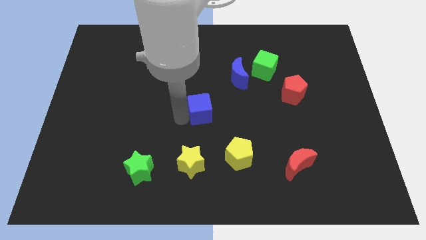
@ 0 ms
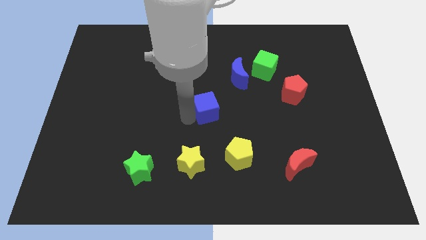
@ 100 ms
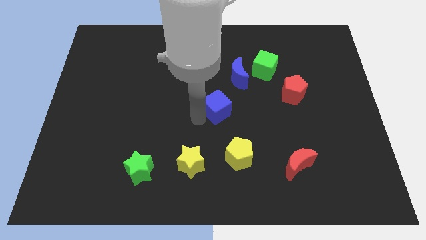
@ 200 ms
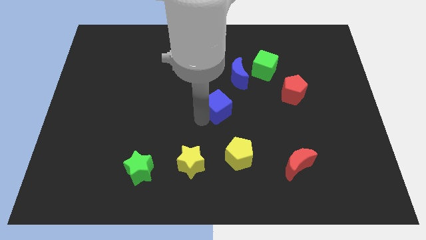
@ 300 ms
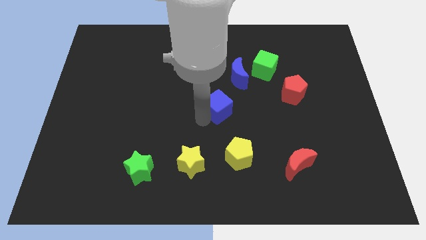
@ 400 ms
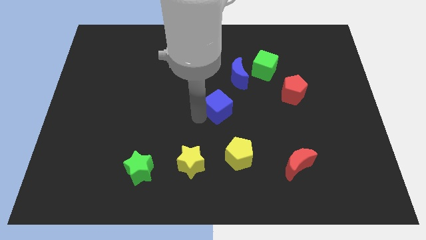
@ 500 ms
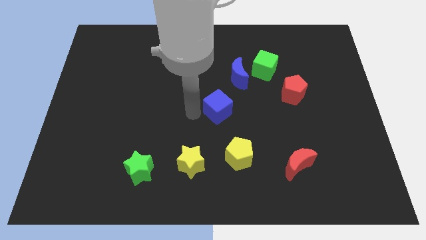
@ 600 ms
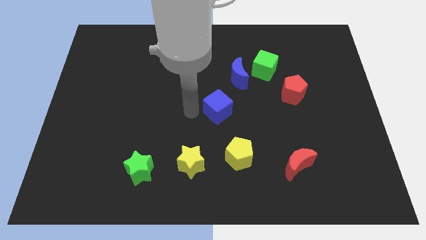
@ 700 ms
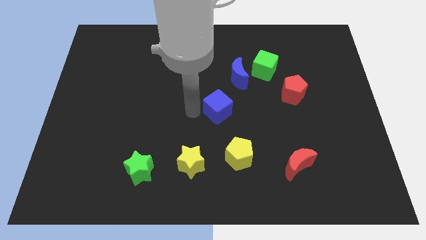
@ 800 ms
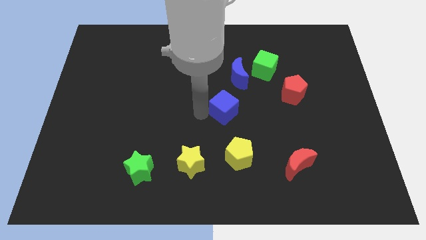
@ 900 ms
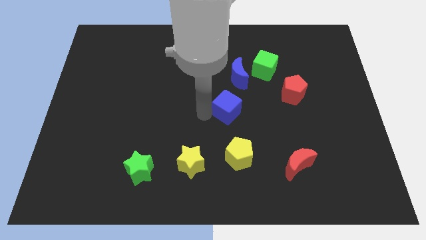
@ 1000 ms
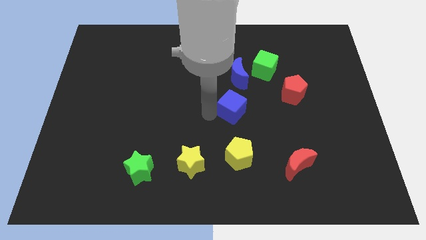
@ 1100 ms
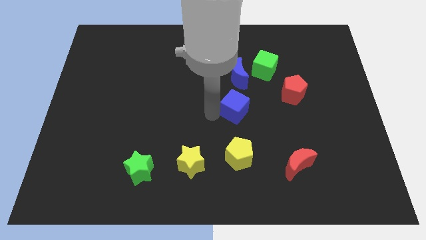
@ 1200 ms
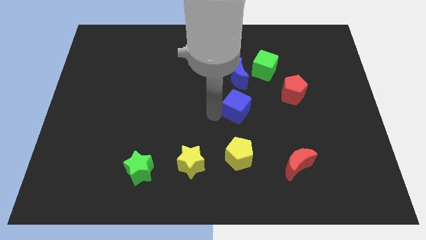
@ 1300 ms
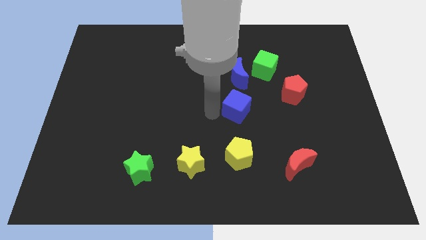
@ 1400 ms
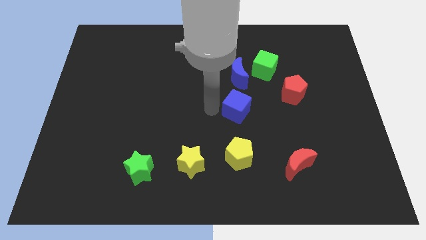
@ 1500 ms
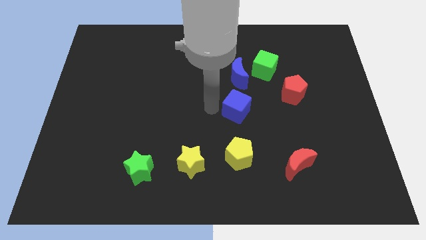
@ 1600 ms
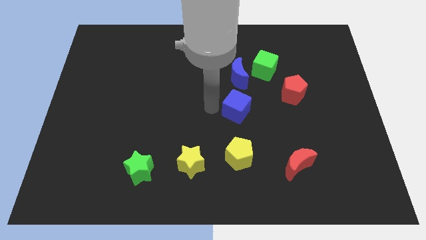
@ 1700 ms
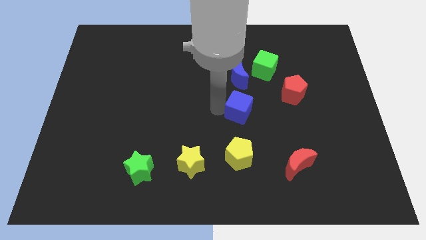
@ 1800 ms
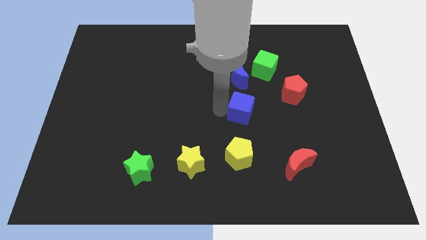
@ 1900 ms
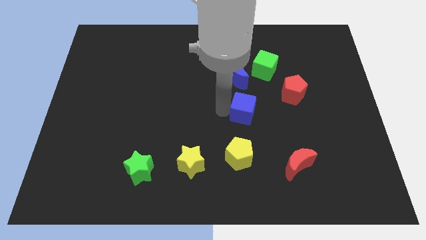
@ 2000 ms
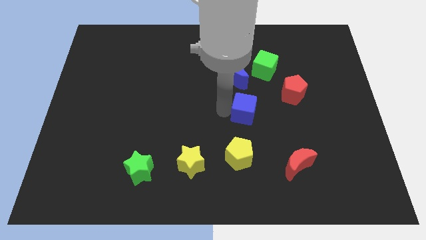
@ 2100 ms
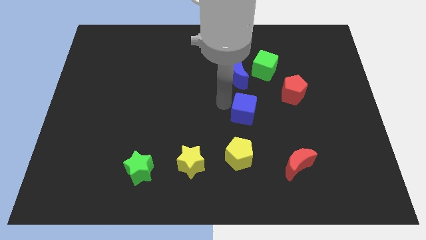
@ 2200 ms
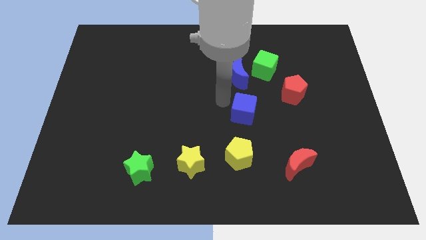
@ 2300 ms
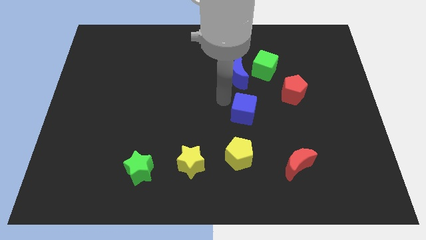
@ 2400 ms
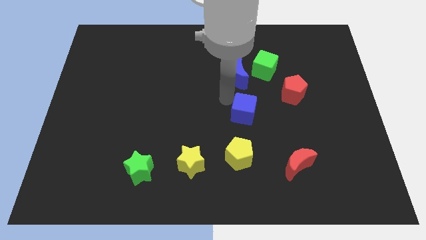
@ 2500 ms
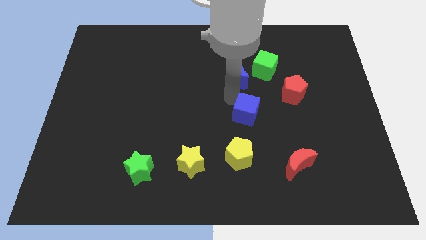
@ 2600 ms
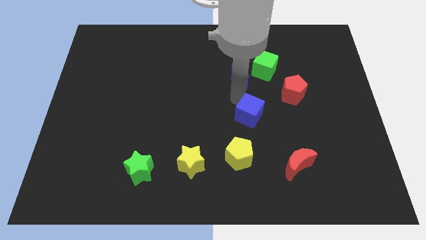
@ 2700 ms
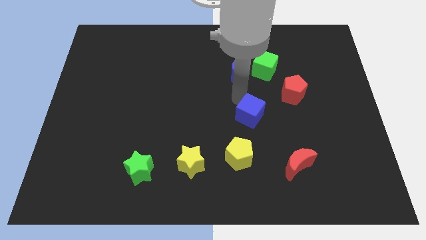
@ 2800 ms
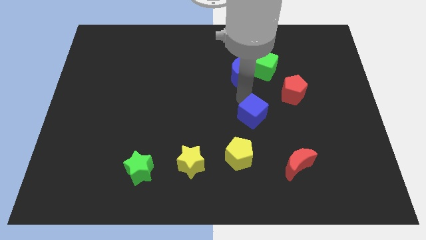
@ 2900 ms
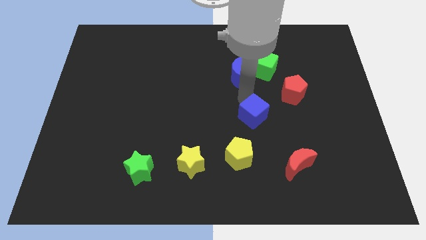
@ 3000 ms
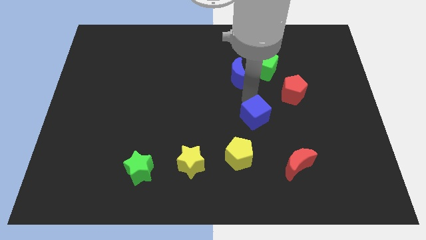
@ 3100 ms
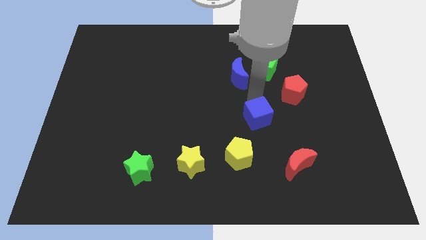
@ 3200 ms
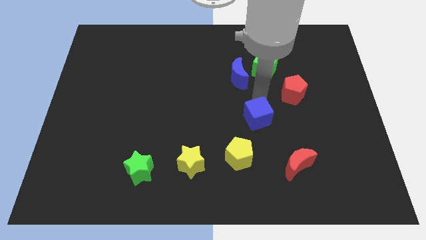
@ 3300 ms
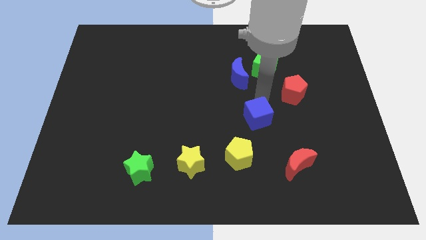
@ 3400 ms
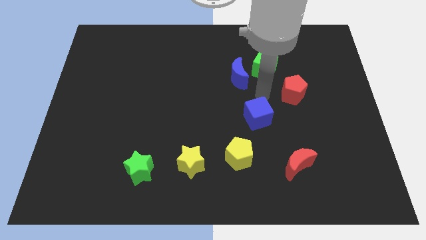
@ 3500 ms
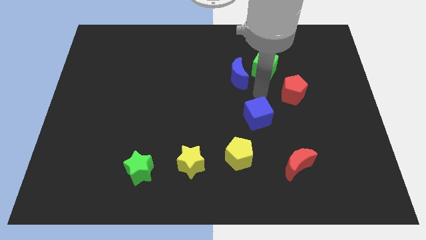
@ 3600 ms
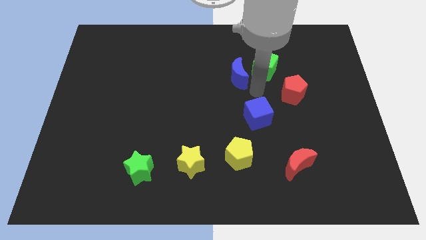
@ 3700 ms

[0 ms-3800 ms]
drag the blue cube diagonally top right to yellow pentagon

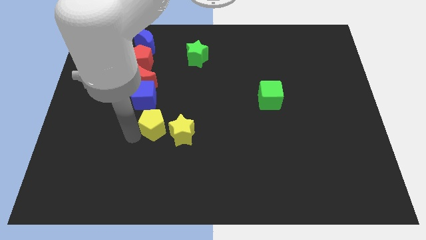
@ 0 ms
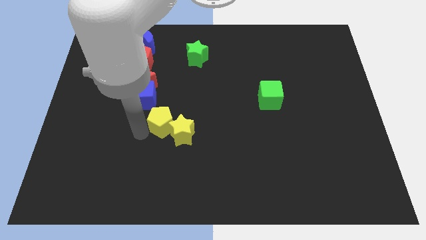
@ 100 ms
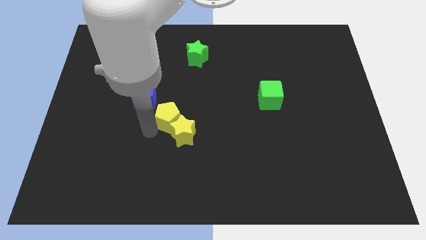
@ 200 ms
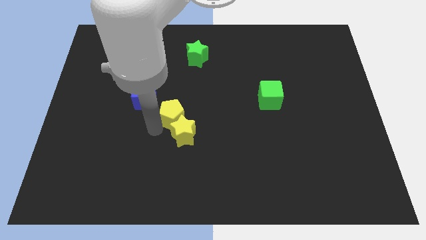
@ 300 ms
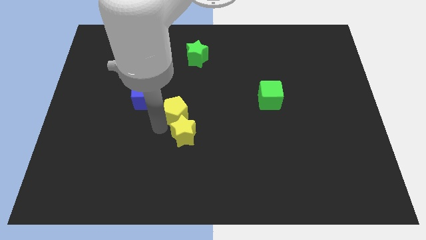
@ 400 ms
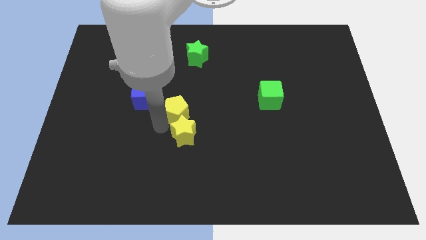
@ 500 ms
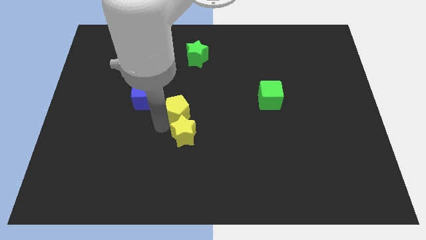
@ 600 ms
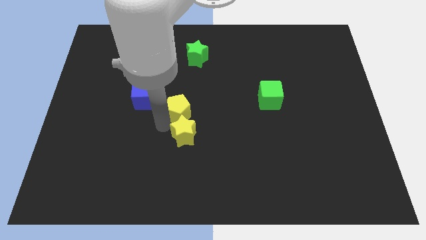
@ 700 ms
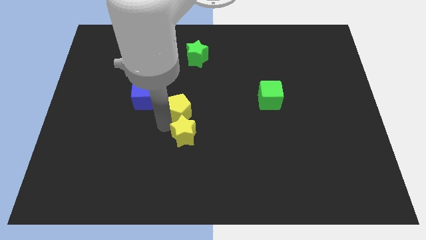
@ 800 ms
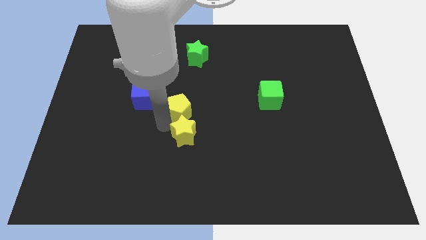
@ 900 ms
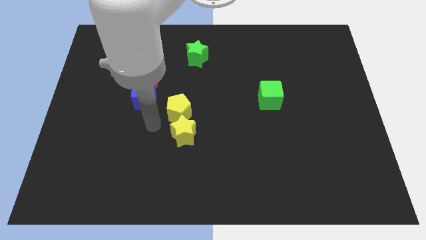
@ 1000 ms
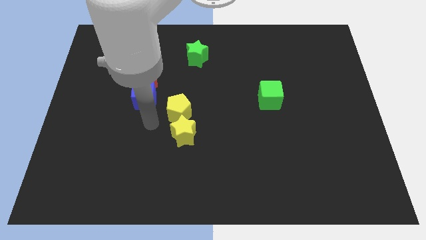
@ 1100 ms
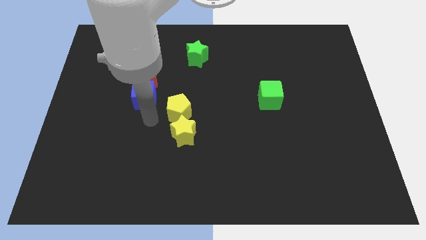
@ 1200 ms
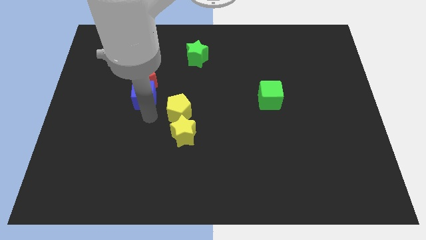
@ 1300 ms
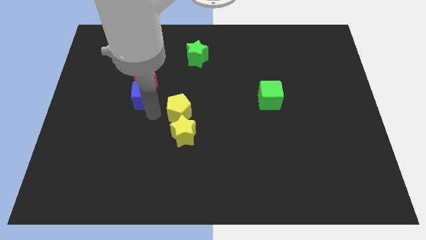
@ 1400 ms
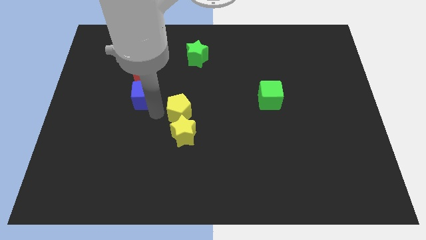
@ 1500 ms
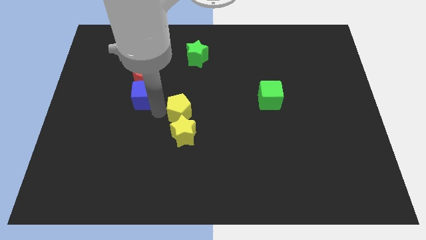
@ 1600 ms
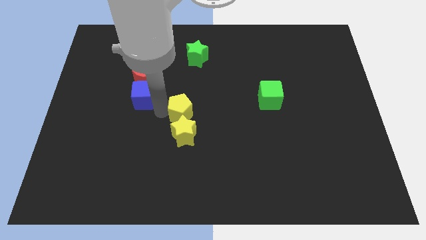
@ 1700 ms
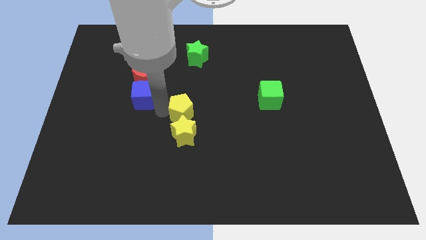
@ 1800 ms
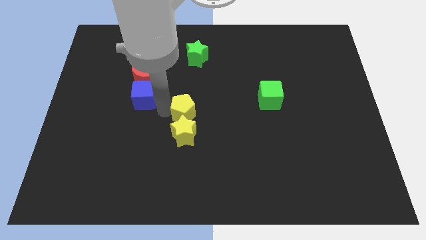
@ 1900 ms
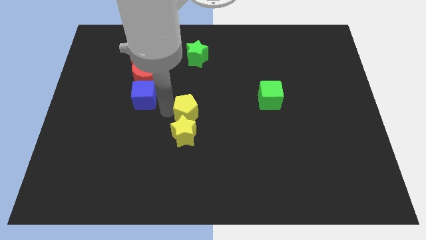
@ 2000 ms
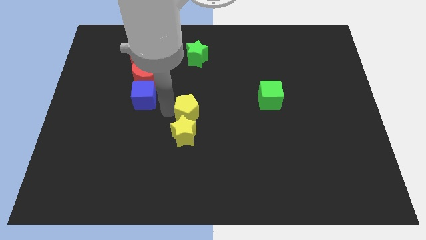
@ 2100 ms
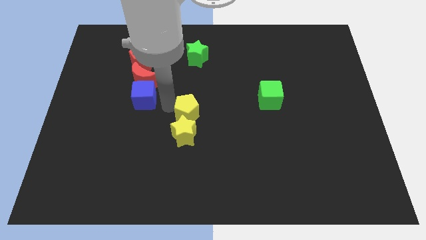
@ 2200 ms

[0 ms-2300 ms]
put the yellow pentagon above the yellow star

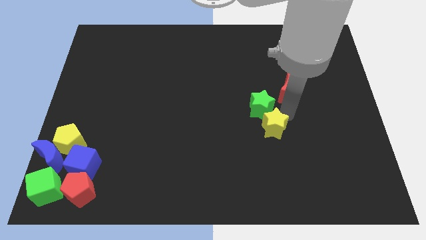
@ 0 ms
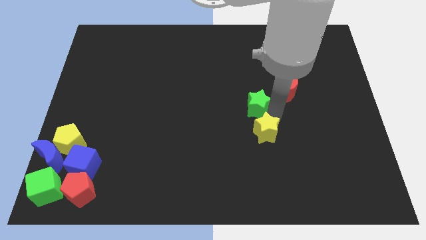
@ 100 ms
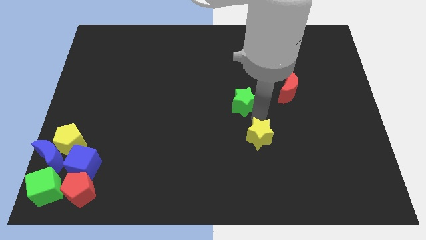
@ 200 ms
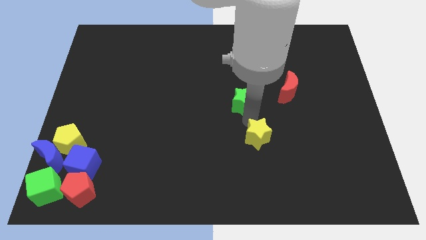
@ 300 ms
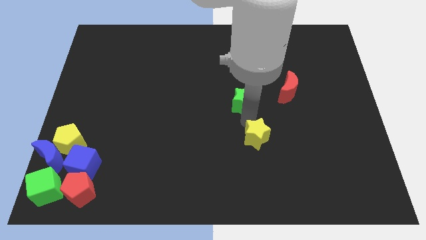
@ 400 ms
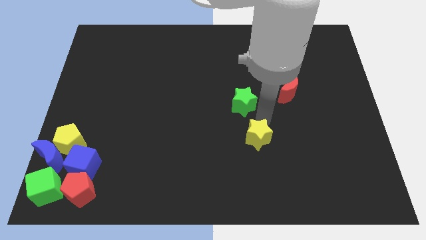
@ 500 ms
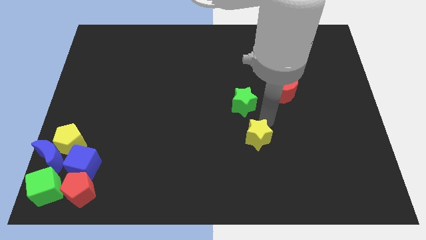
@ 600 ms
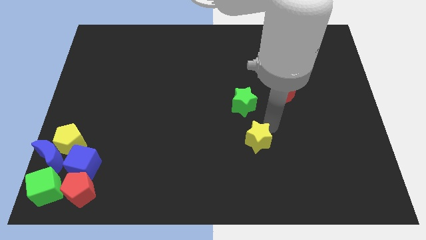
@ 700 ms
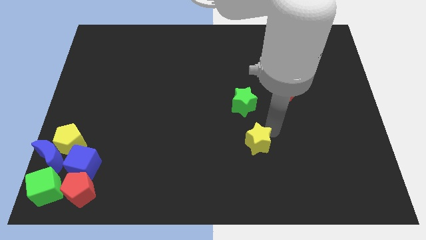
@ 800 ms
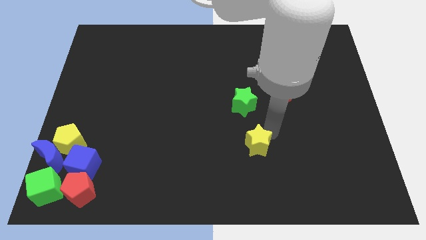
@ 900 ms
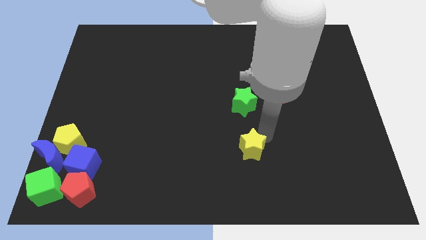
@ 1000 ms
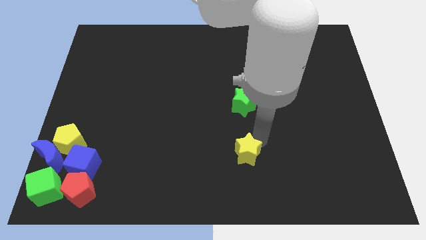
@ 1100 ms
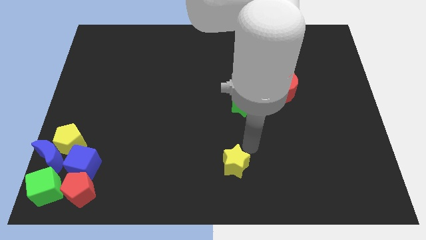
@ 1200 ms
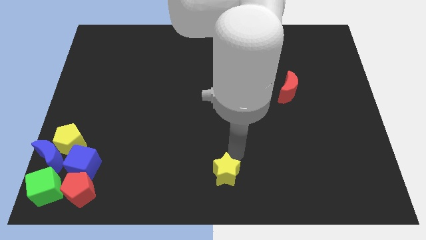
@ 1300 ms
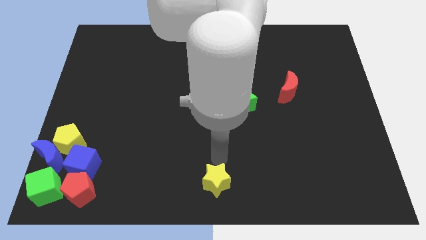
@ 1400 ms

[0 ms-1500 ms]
separate the yellow and green star

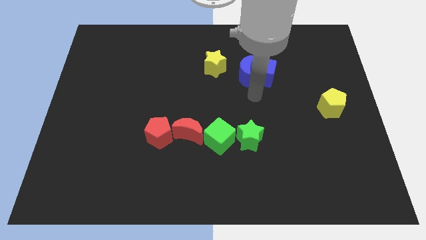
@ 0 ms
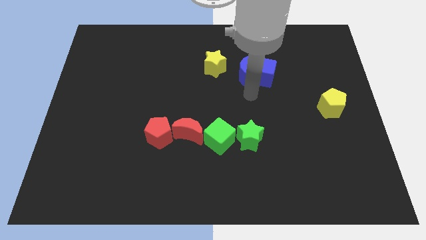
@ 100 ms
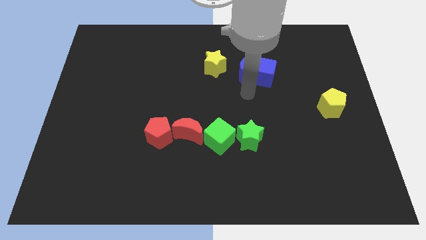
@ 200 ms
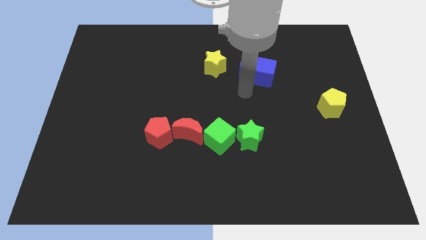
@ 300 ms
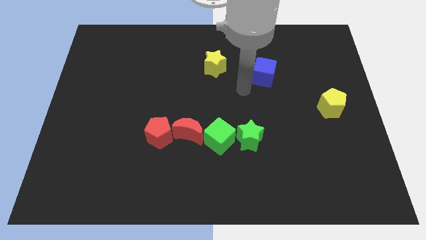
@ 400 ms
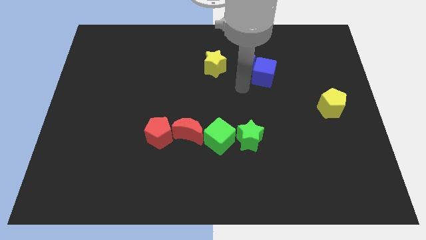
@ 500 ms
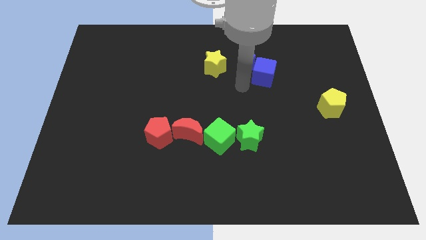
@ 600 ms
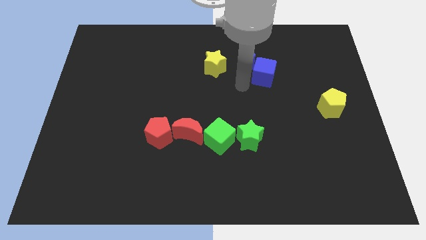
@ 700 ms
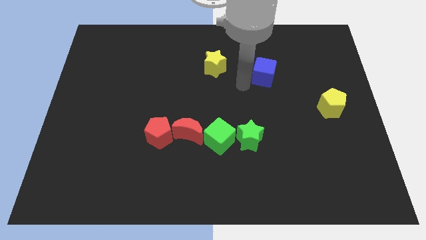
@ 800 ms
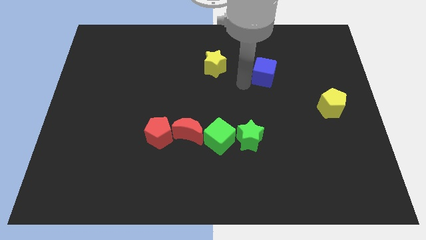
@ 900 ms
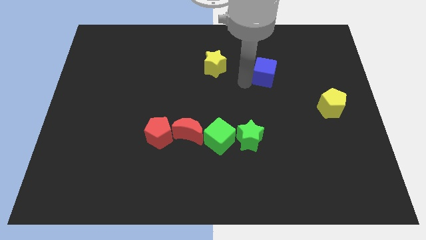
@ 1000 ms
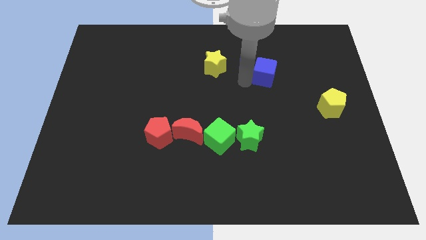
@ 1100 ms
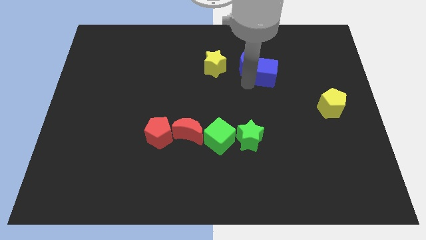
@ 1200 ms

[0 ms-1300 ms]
slide the blue moon to the top of the board
